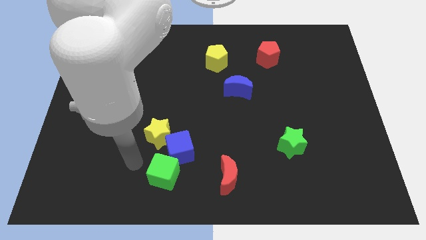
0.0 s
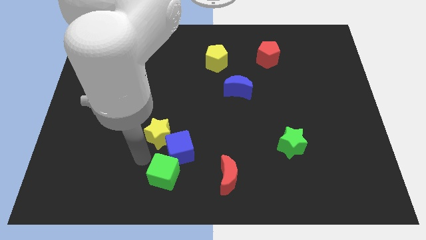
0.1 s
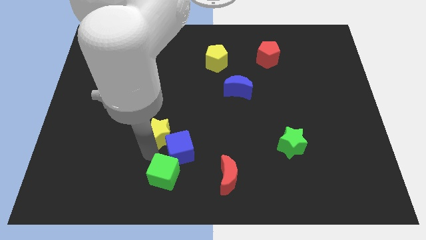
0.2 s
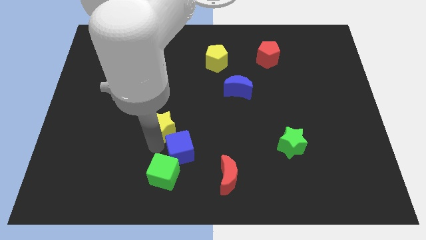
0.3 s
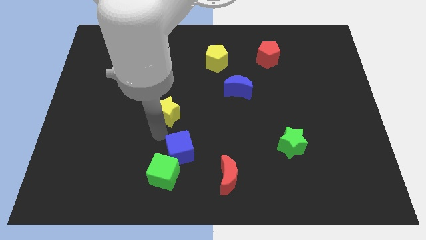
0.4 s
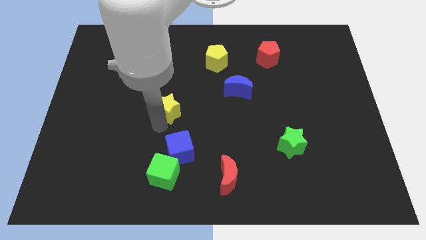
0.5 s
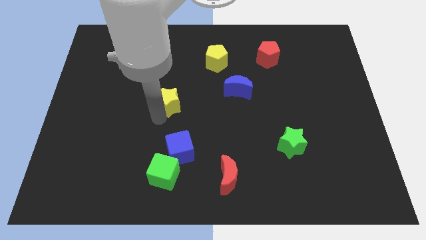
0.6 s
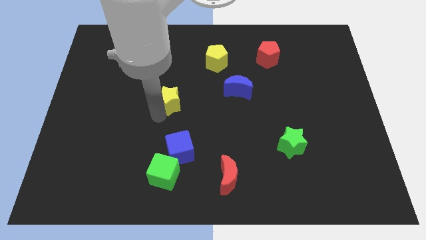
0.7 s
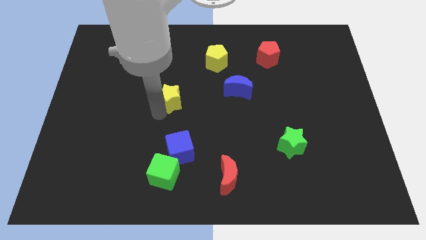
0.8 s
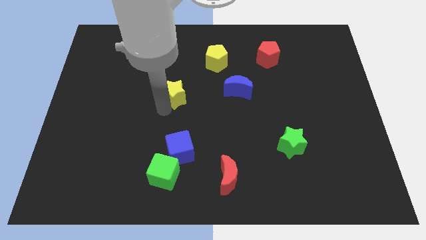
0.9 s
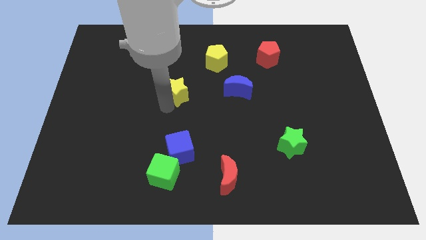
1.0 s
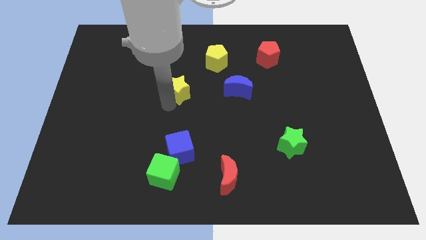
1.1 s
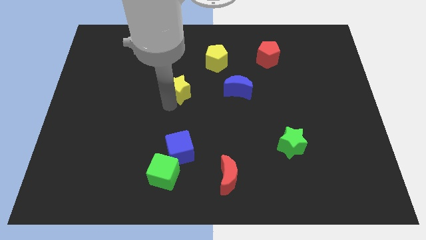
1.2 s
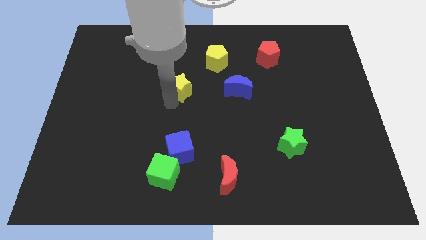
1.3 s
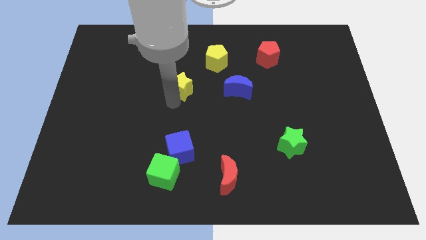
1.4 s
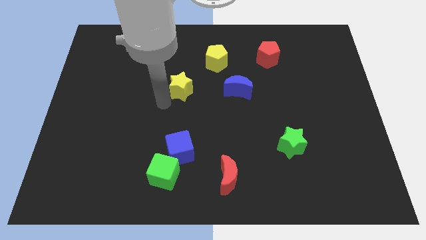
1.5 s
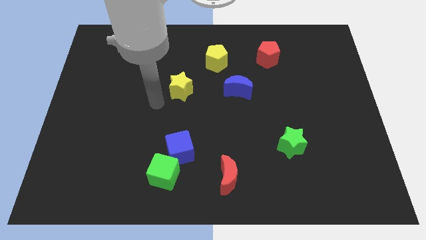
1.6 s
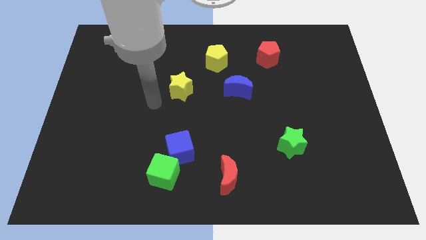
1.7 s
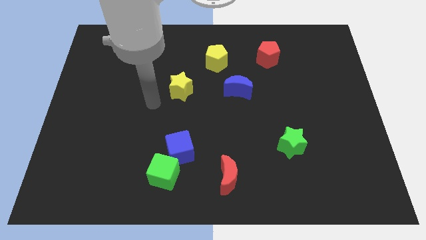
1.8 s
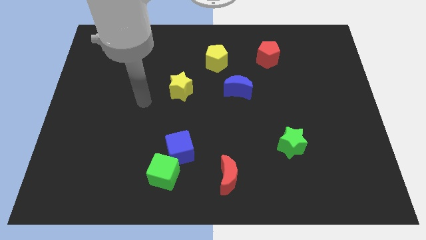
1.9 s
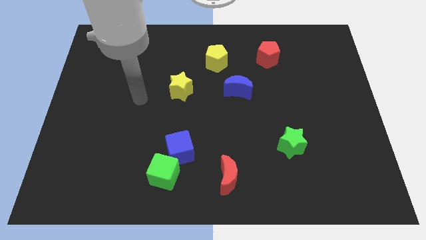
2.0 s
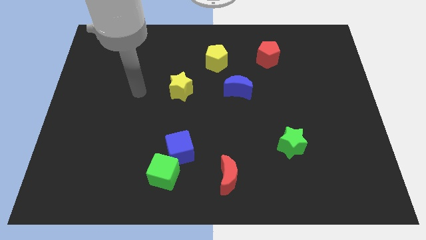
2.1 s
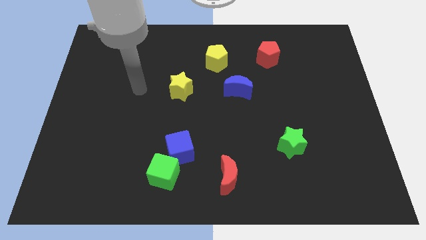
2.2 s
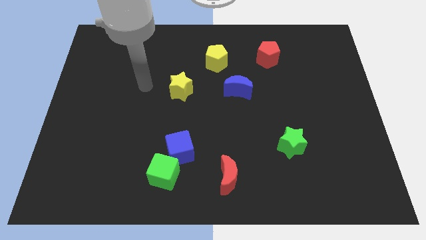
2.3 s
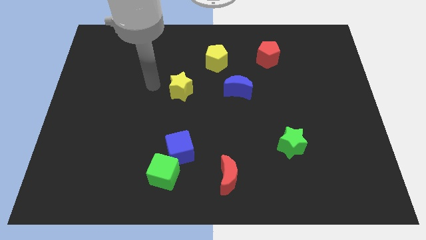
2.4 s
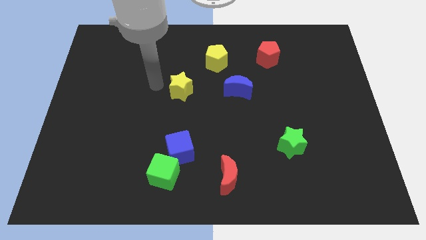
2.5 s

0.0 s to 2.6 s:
move the yellow star parallel to the blue crescent

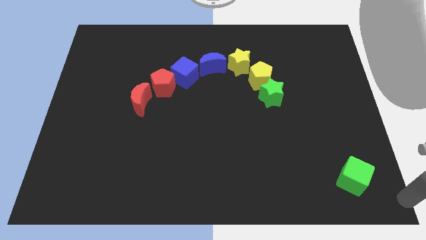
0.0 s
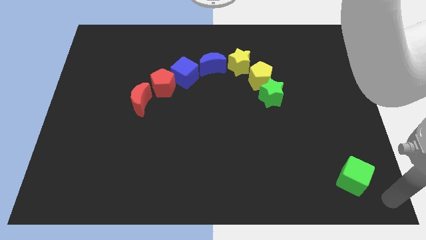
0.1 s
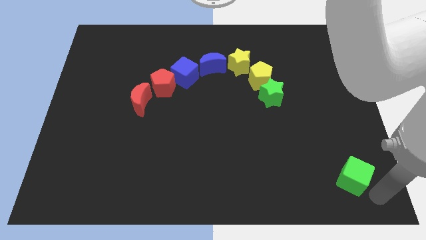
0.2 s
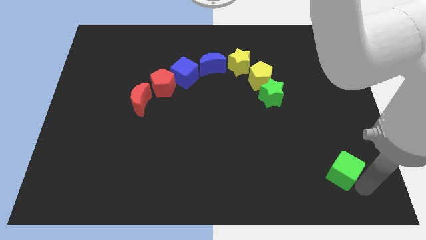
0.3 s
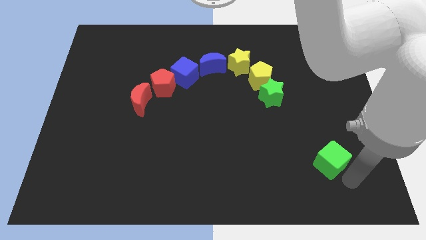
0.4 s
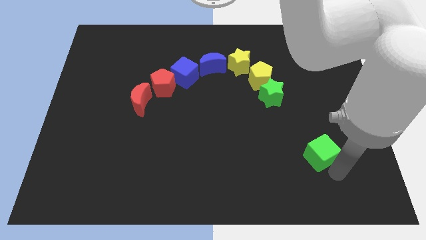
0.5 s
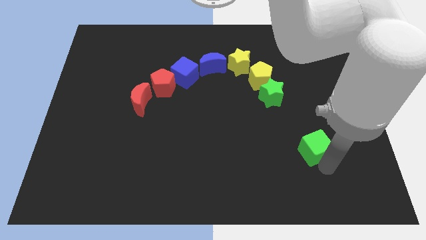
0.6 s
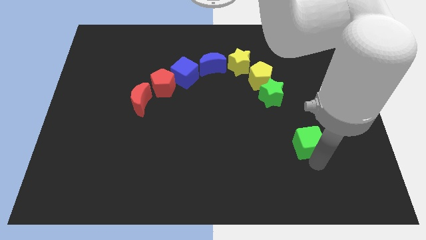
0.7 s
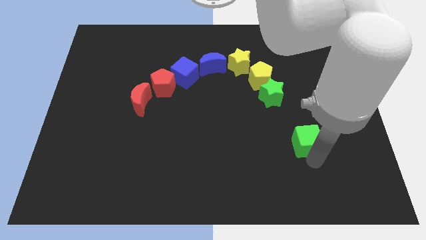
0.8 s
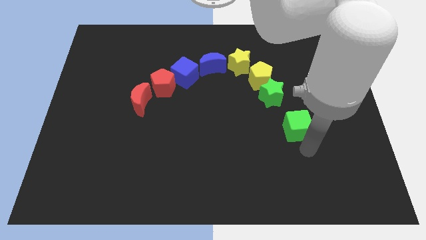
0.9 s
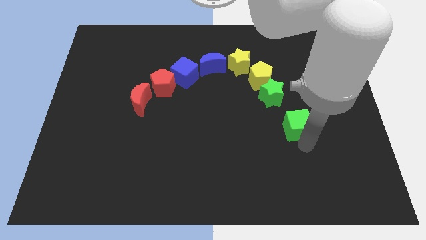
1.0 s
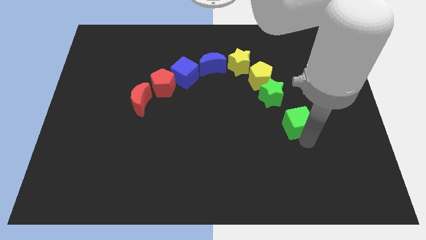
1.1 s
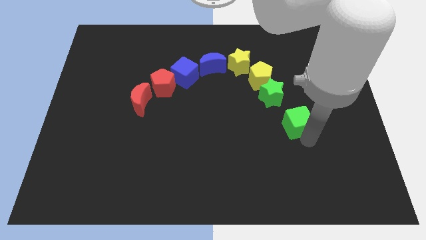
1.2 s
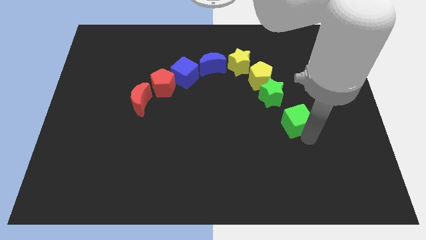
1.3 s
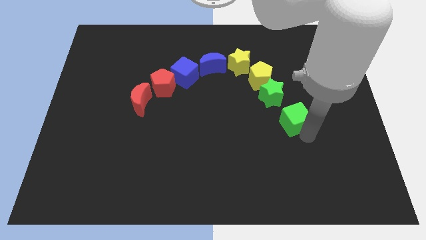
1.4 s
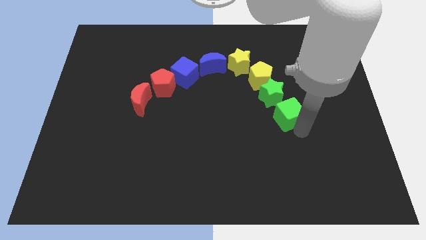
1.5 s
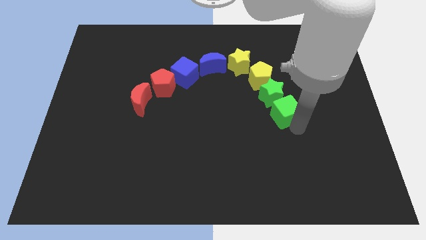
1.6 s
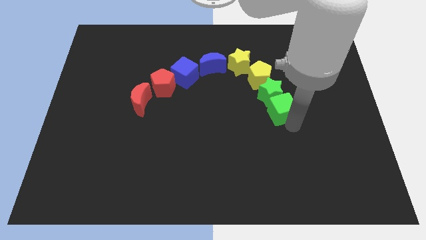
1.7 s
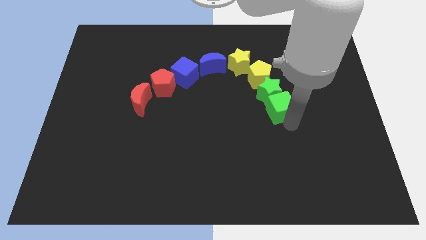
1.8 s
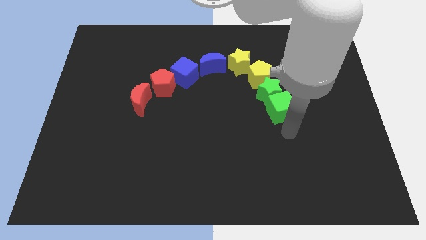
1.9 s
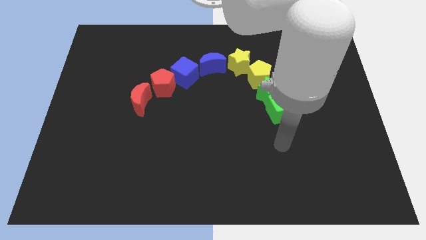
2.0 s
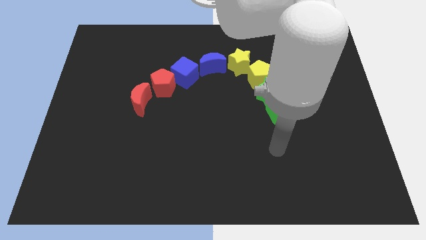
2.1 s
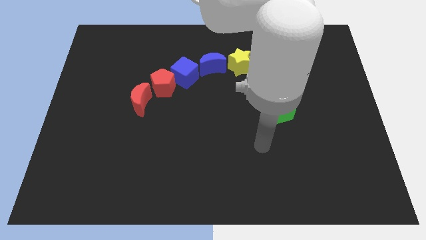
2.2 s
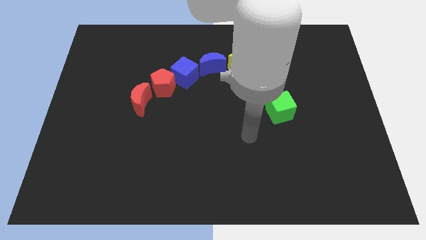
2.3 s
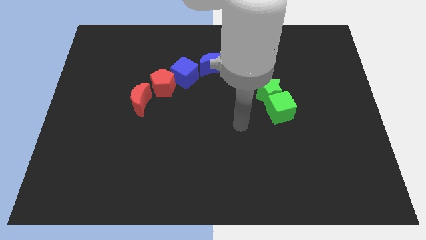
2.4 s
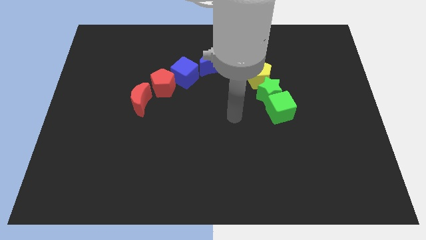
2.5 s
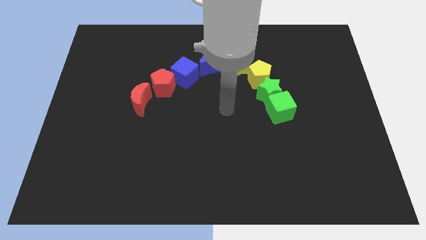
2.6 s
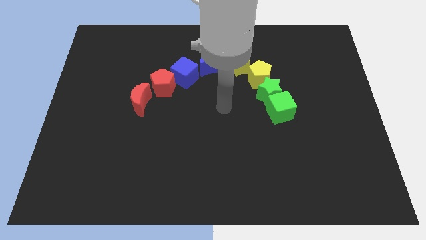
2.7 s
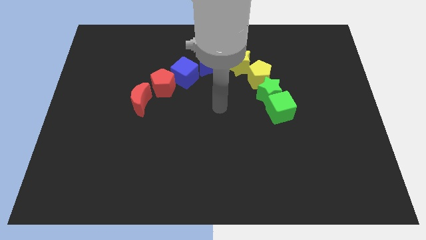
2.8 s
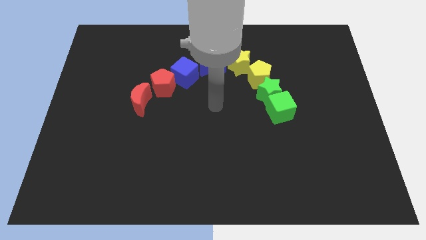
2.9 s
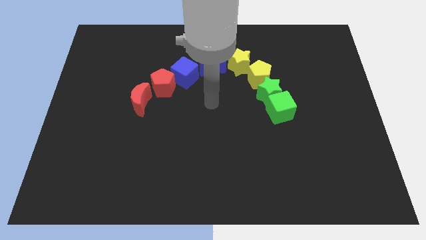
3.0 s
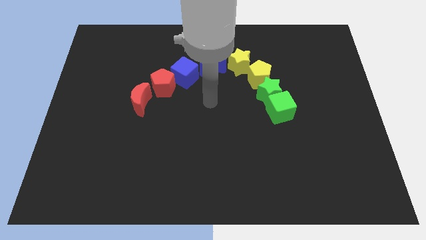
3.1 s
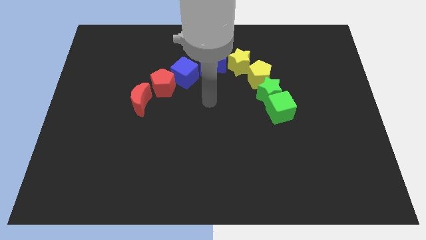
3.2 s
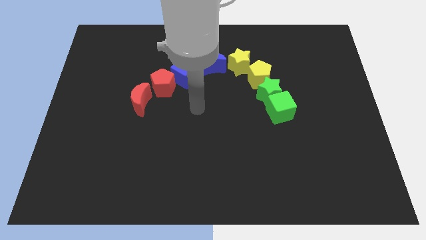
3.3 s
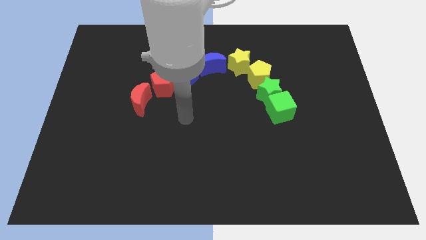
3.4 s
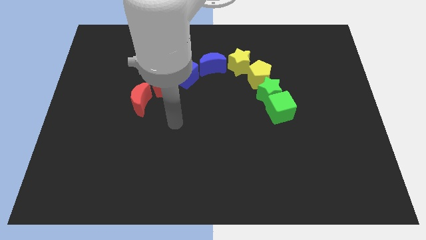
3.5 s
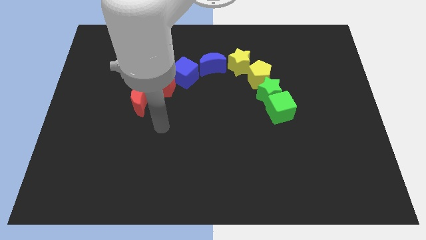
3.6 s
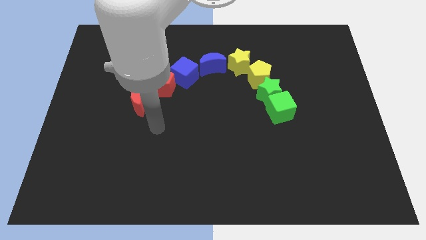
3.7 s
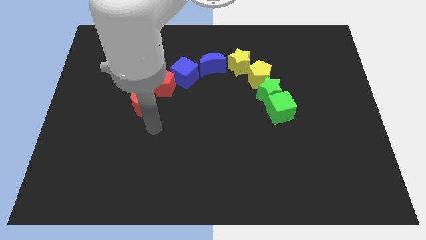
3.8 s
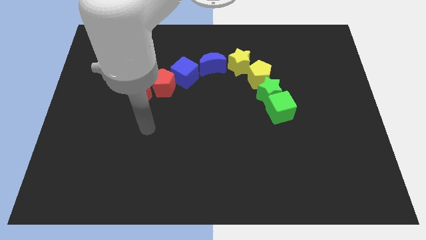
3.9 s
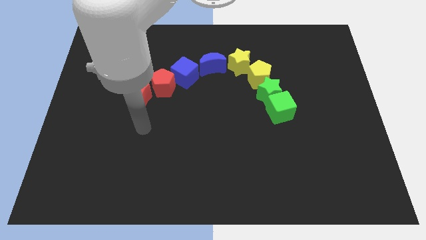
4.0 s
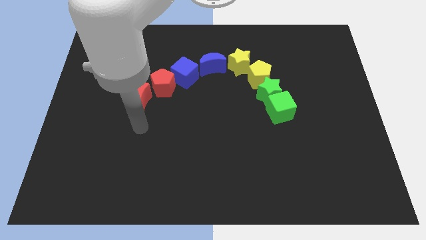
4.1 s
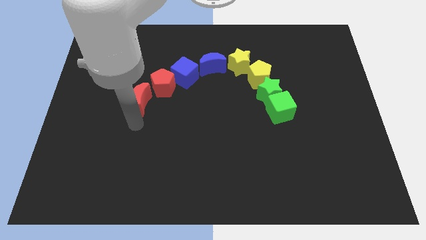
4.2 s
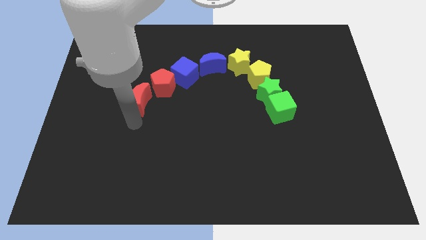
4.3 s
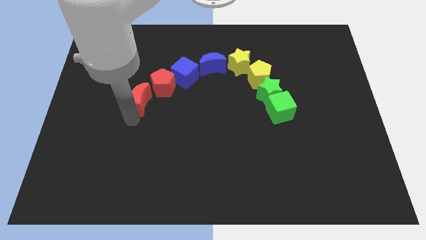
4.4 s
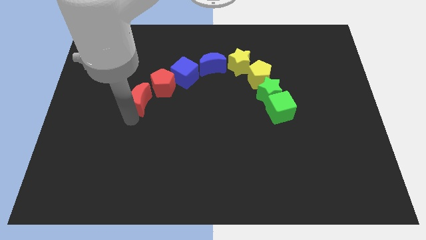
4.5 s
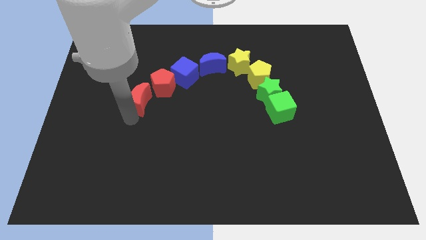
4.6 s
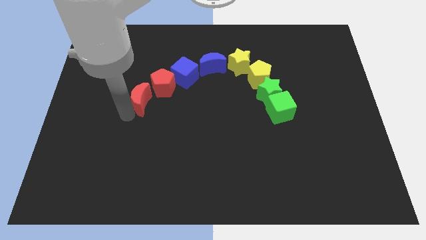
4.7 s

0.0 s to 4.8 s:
place the green cube below the green star

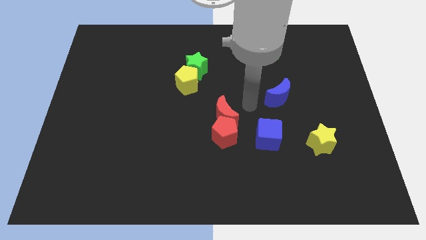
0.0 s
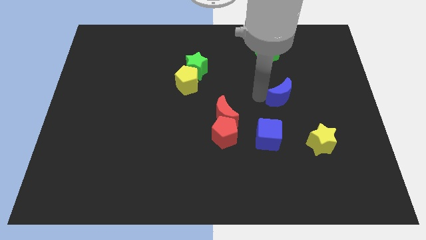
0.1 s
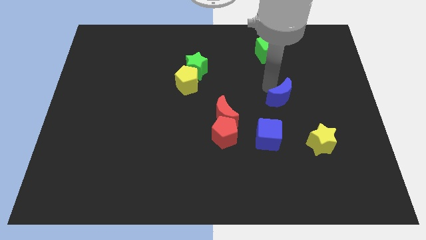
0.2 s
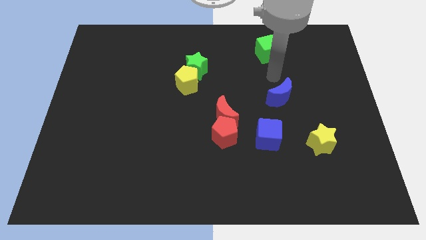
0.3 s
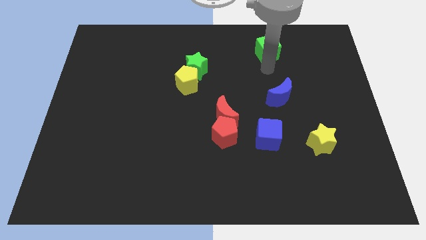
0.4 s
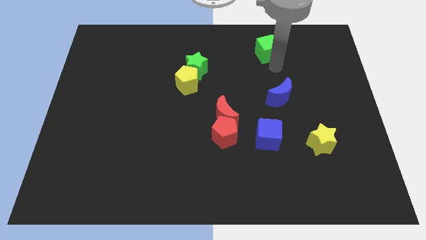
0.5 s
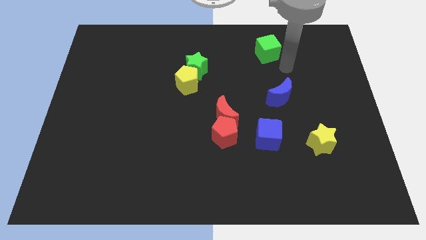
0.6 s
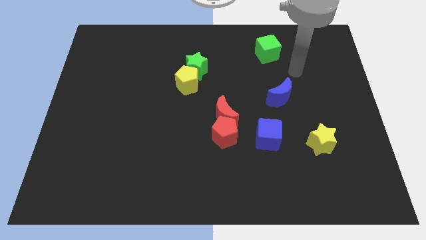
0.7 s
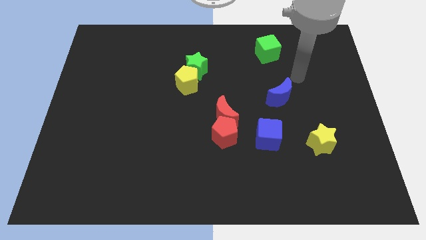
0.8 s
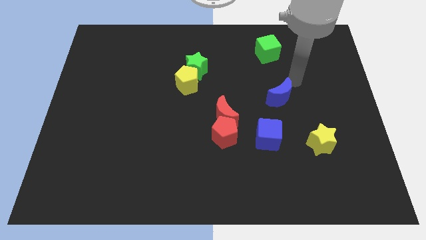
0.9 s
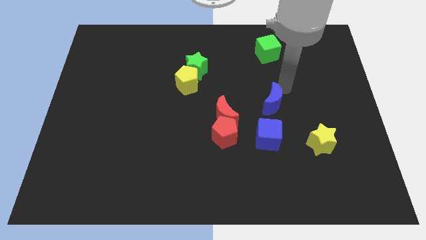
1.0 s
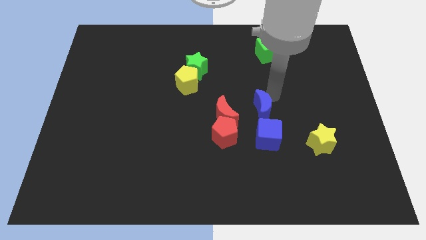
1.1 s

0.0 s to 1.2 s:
slide blue crescent close to blue cube

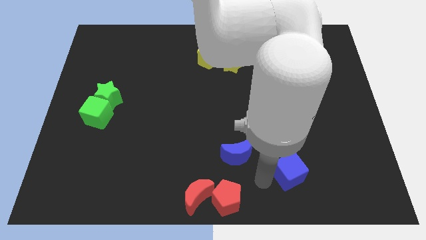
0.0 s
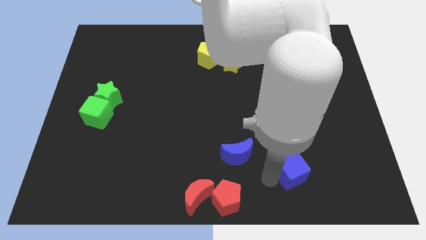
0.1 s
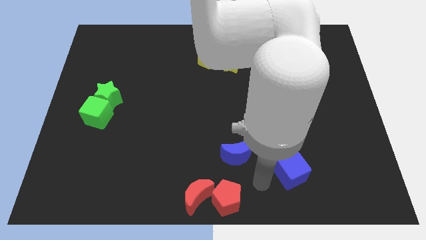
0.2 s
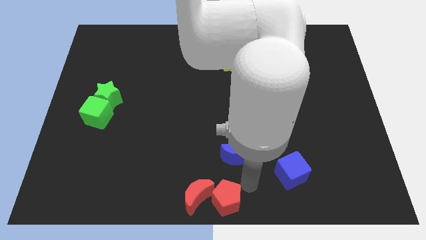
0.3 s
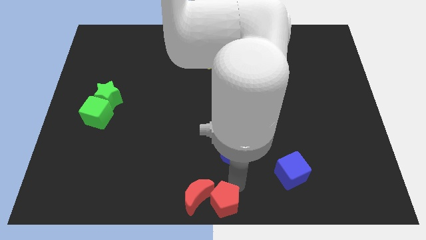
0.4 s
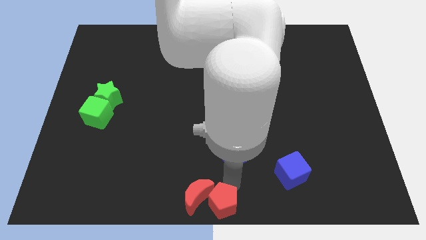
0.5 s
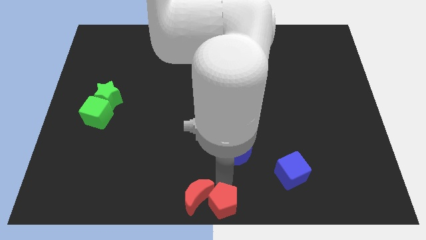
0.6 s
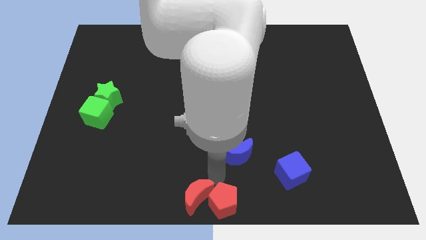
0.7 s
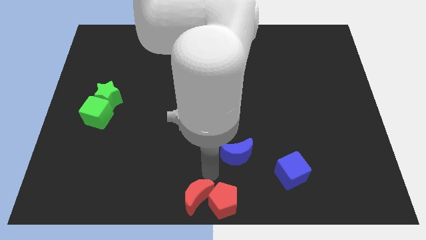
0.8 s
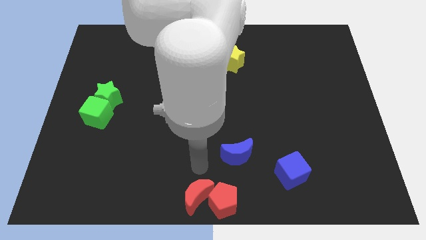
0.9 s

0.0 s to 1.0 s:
push the red pentagon downwards slightly
